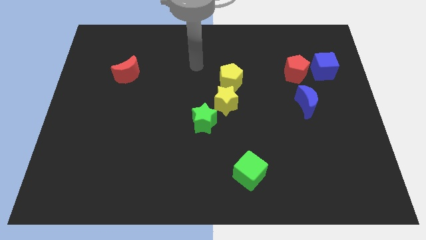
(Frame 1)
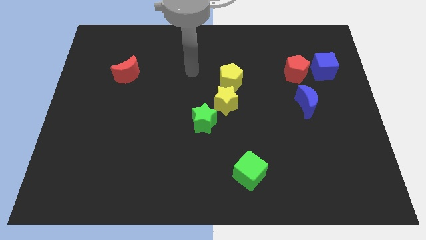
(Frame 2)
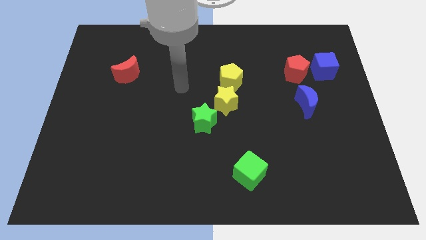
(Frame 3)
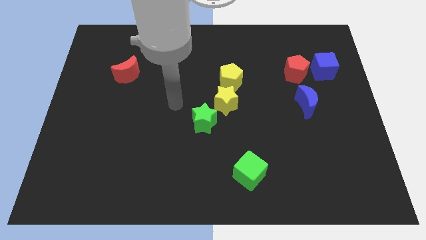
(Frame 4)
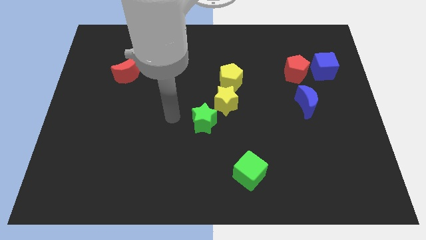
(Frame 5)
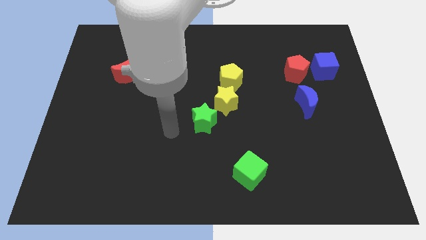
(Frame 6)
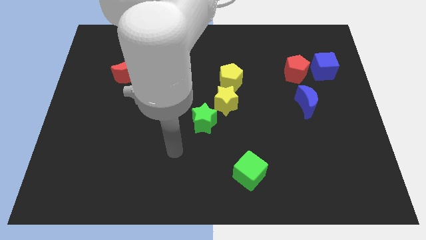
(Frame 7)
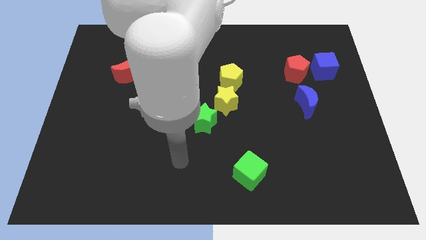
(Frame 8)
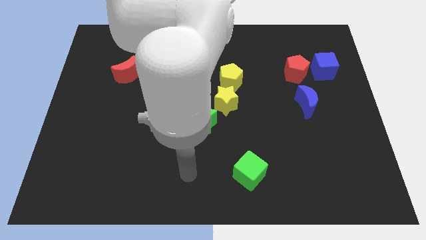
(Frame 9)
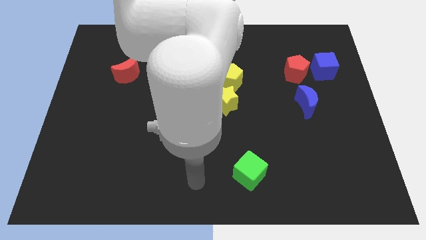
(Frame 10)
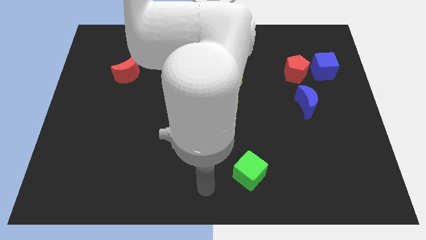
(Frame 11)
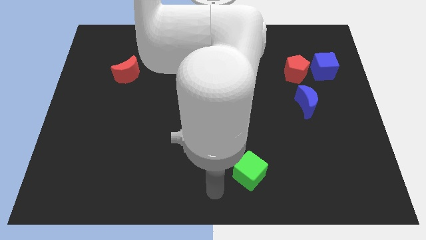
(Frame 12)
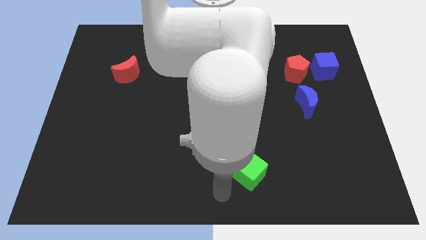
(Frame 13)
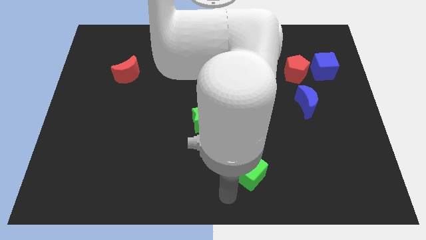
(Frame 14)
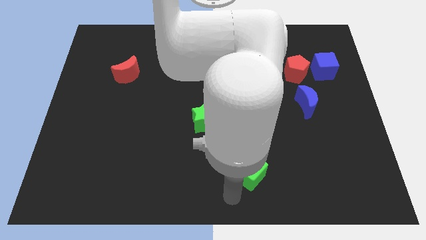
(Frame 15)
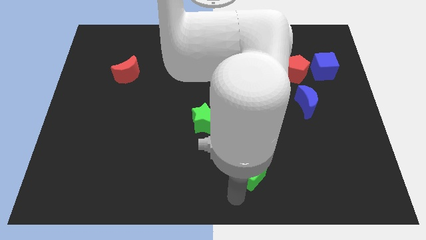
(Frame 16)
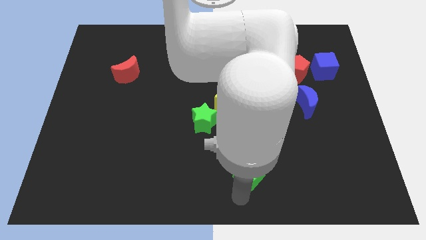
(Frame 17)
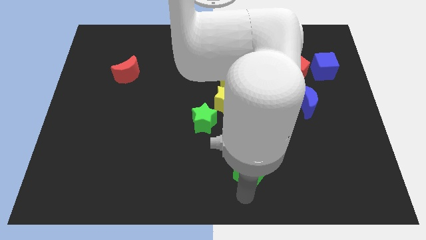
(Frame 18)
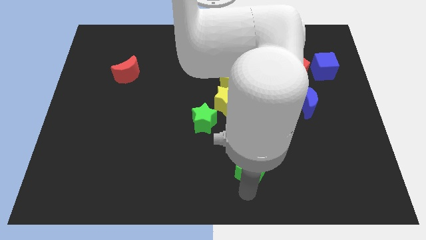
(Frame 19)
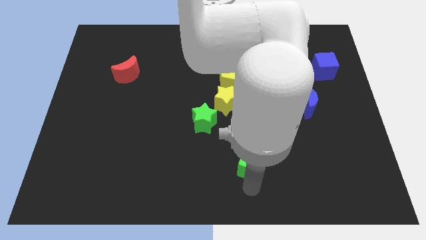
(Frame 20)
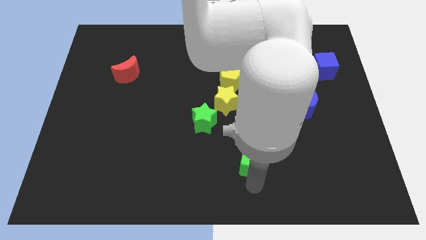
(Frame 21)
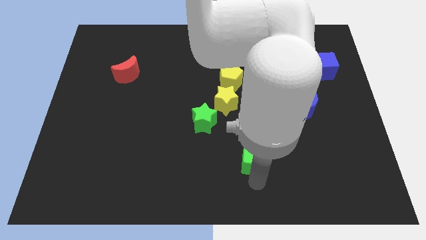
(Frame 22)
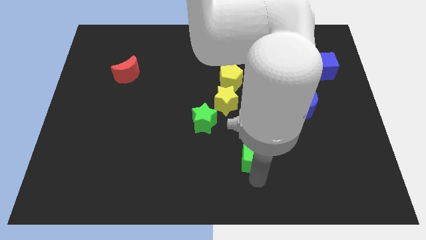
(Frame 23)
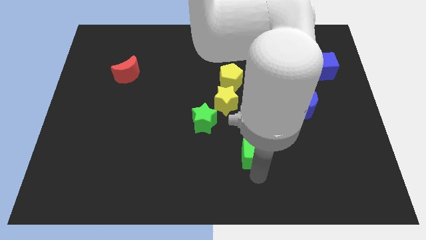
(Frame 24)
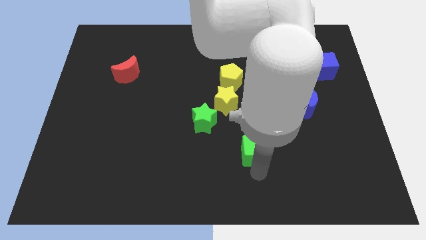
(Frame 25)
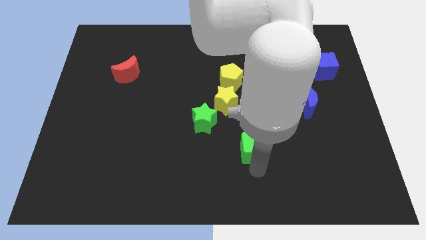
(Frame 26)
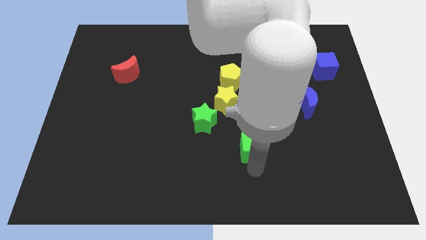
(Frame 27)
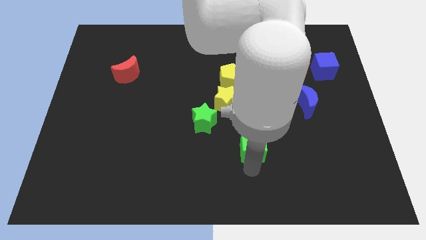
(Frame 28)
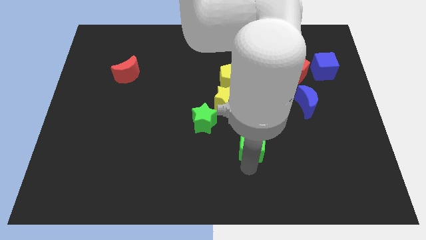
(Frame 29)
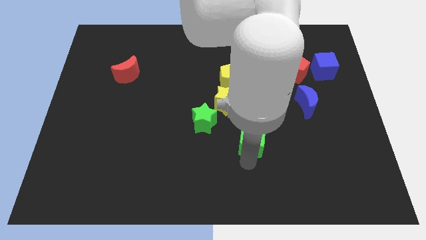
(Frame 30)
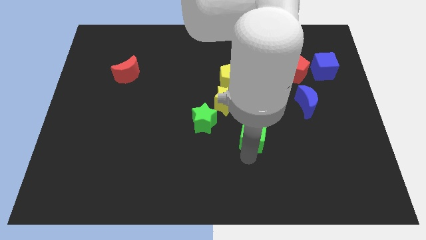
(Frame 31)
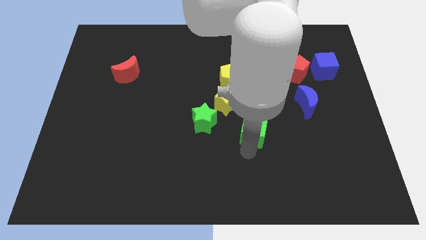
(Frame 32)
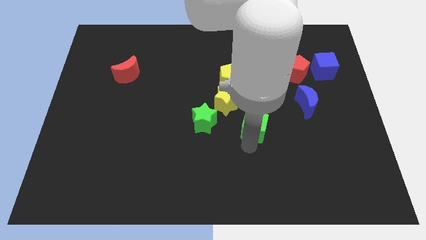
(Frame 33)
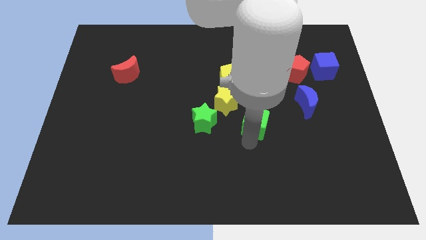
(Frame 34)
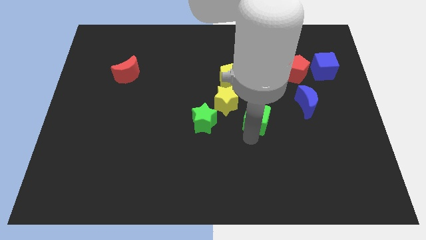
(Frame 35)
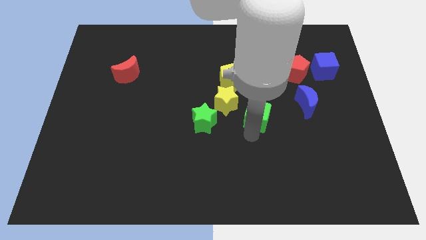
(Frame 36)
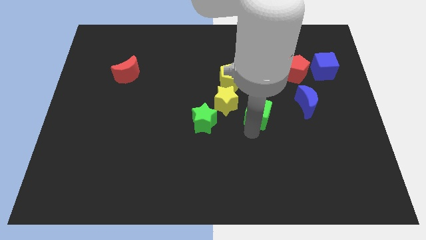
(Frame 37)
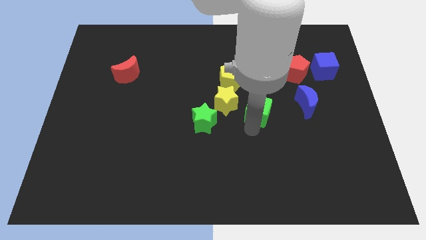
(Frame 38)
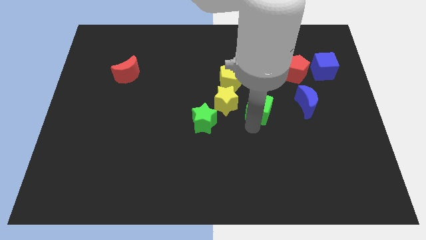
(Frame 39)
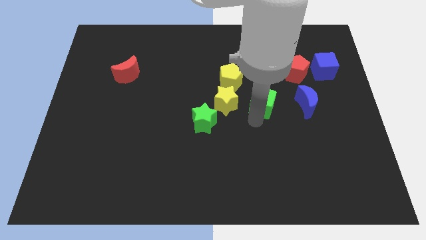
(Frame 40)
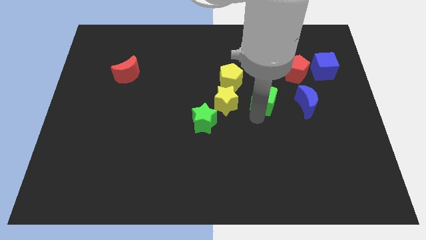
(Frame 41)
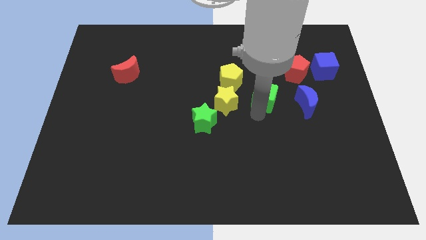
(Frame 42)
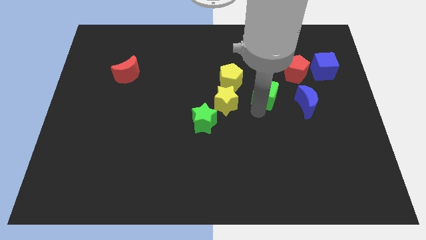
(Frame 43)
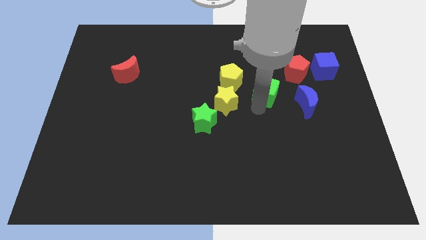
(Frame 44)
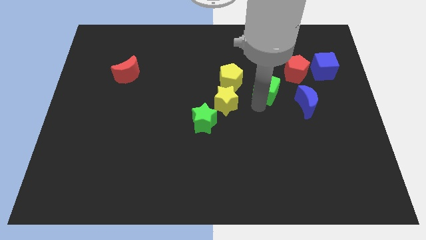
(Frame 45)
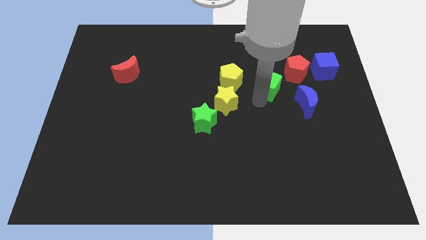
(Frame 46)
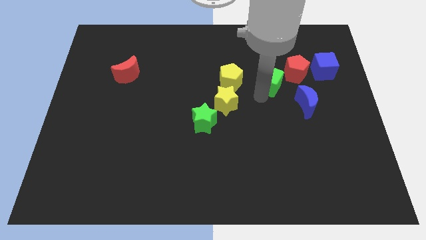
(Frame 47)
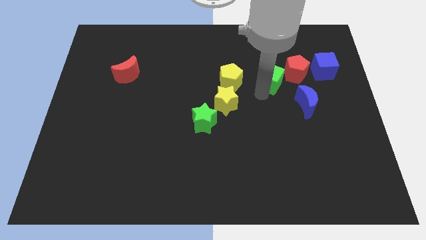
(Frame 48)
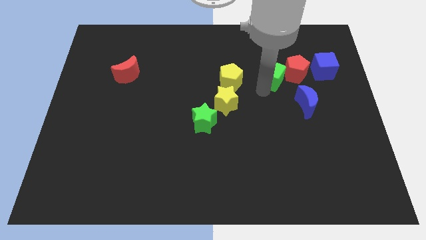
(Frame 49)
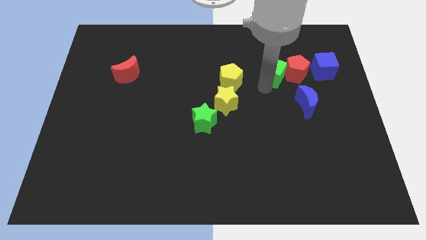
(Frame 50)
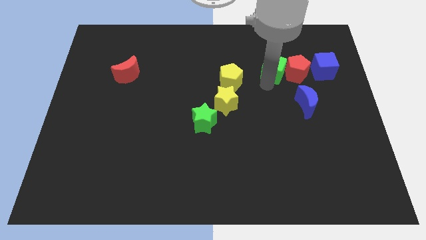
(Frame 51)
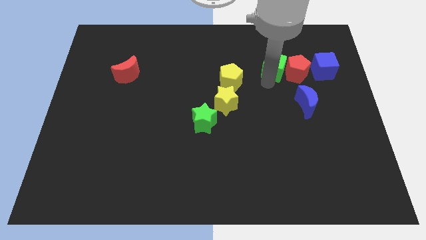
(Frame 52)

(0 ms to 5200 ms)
push the green cube close to the red pentagon

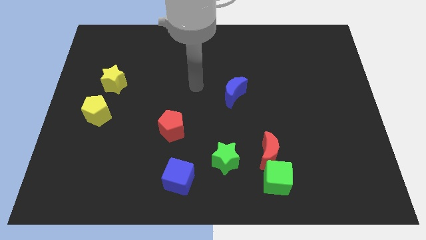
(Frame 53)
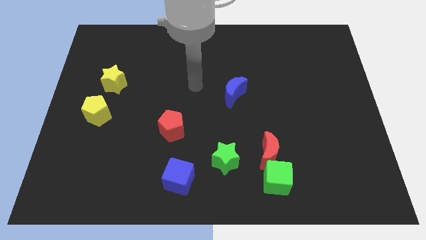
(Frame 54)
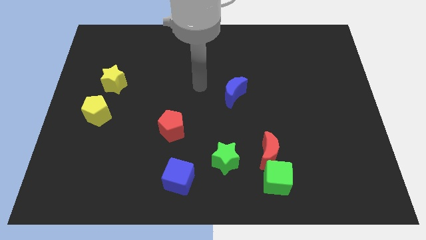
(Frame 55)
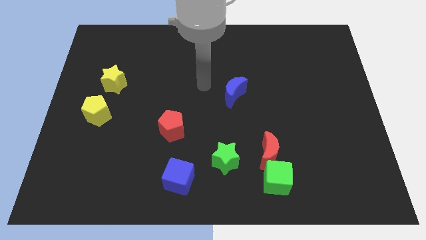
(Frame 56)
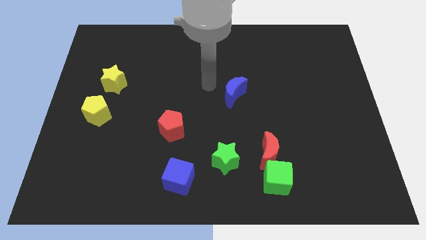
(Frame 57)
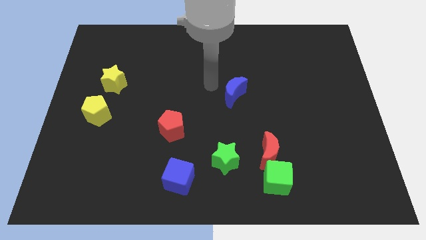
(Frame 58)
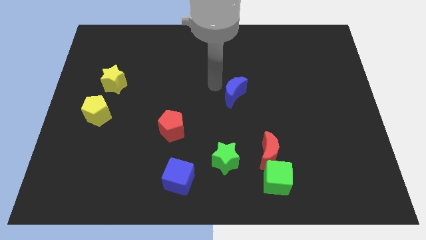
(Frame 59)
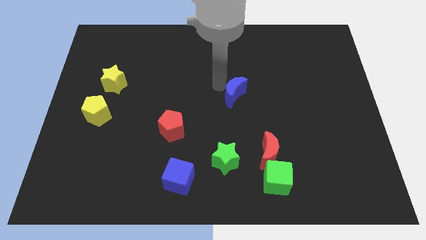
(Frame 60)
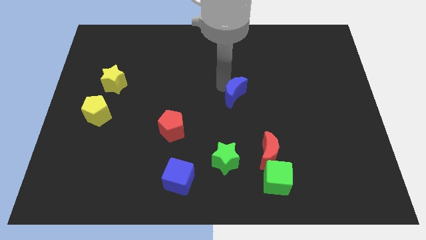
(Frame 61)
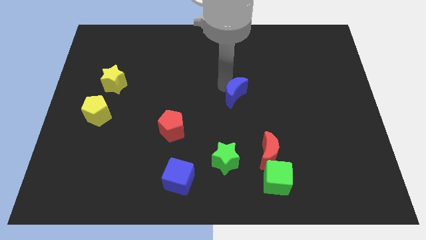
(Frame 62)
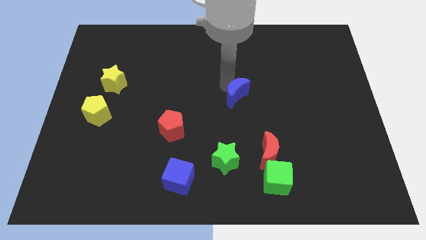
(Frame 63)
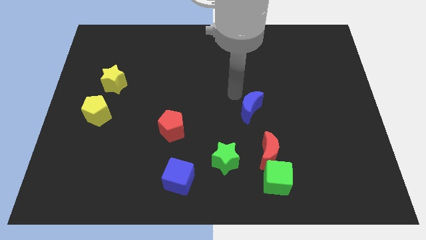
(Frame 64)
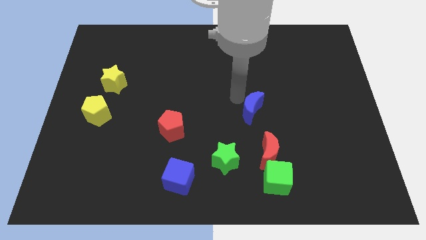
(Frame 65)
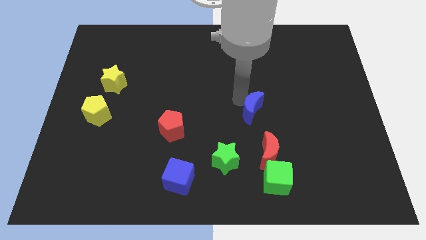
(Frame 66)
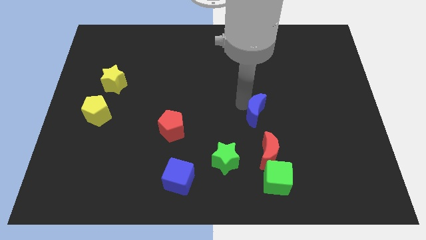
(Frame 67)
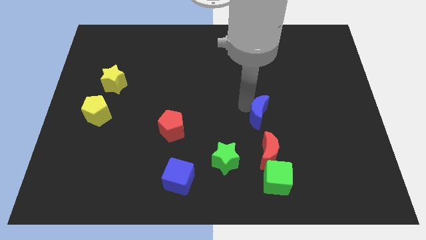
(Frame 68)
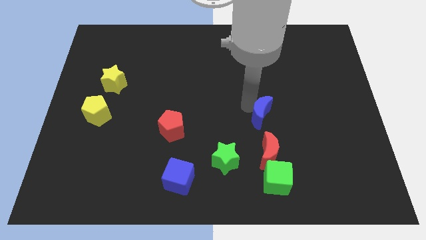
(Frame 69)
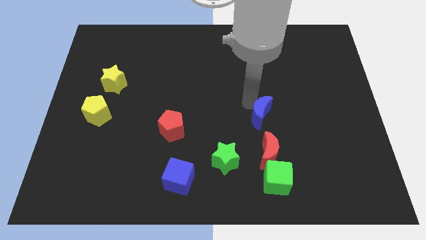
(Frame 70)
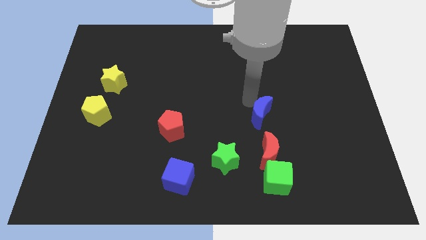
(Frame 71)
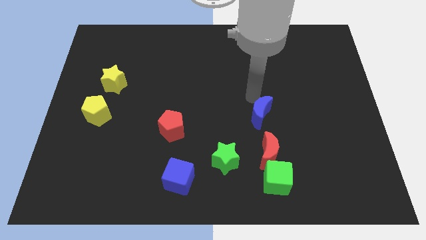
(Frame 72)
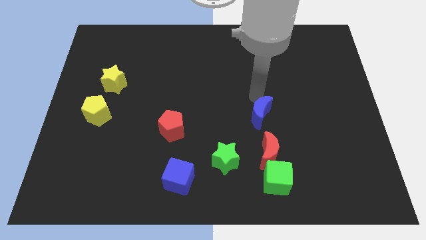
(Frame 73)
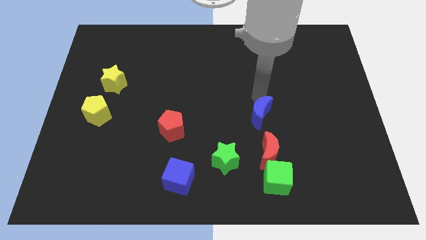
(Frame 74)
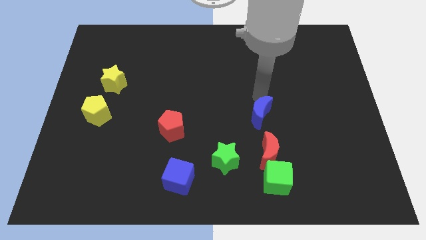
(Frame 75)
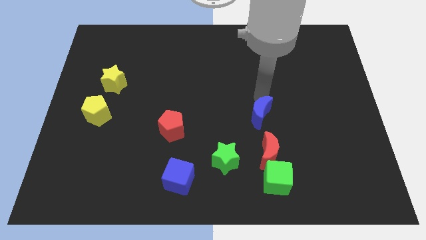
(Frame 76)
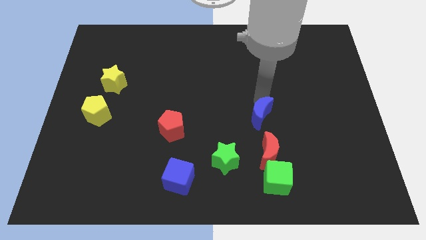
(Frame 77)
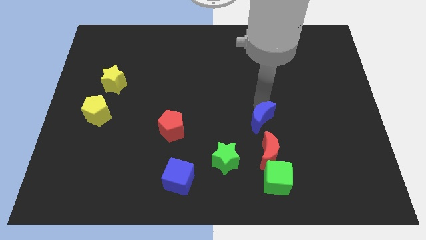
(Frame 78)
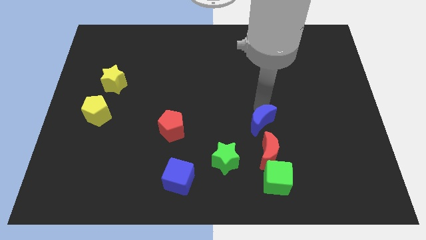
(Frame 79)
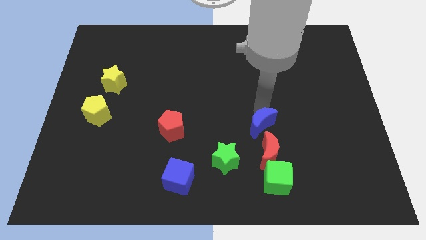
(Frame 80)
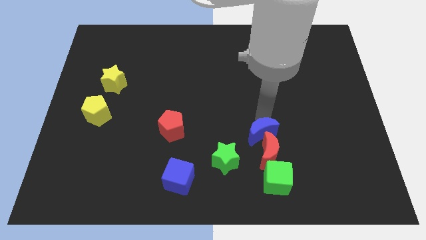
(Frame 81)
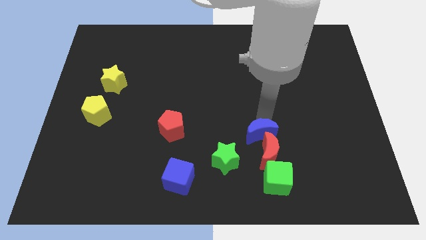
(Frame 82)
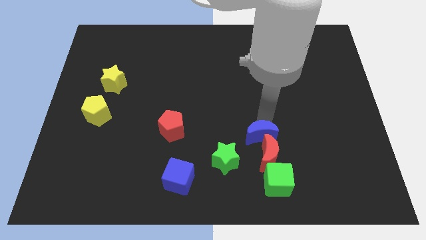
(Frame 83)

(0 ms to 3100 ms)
push the blue moon towards the red moon
